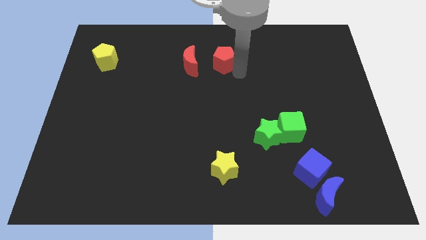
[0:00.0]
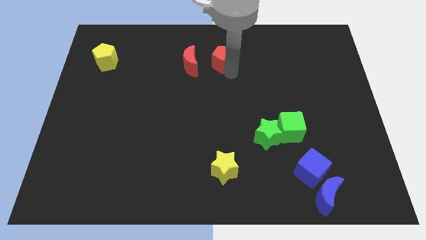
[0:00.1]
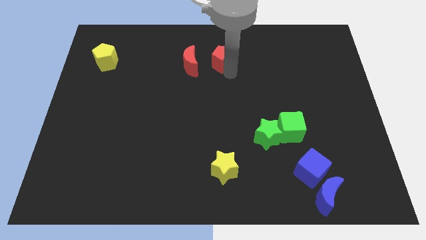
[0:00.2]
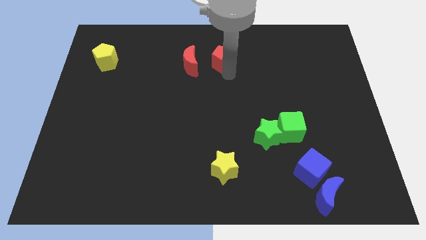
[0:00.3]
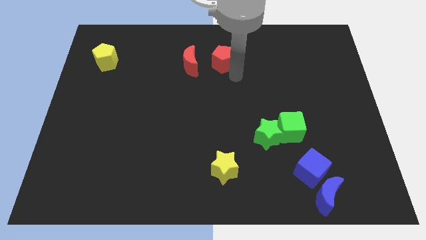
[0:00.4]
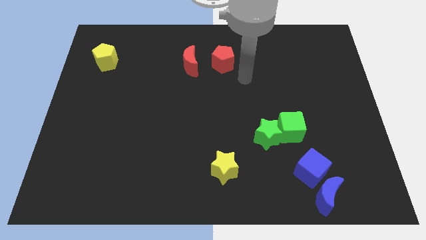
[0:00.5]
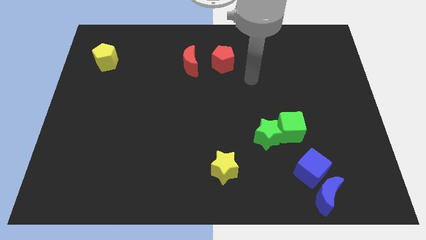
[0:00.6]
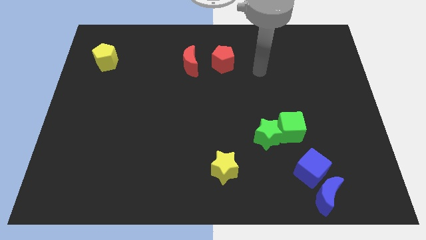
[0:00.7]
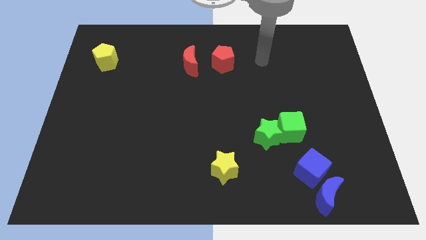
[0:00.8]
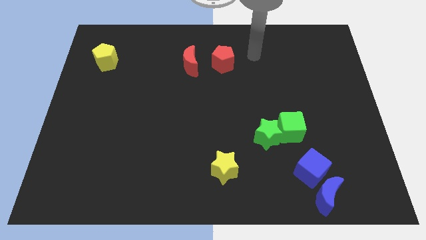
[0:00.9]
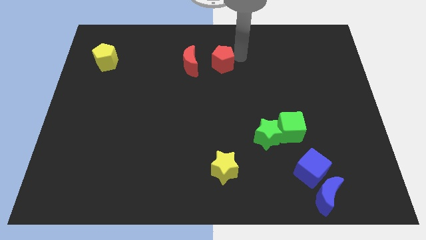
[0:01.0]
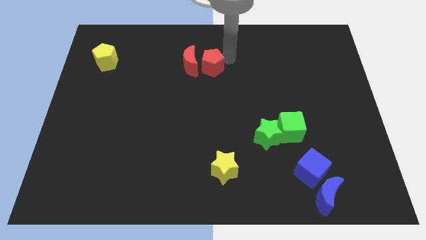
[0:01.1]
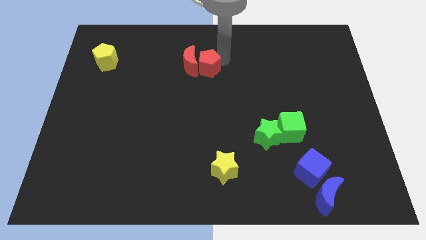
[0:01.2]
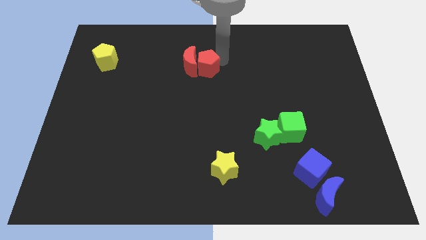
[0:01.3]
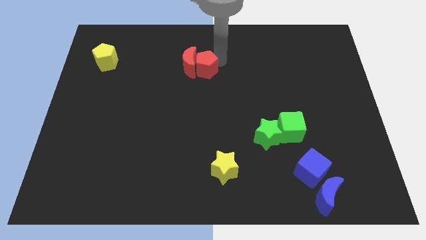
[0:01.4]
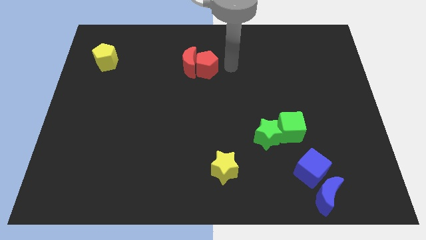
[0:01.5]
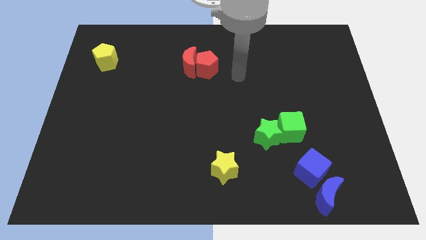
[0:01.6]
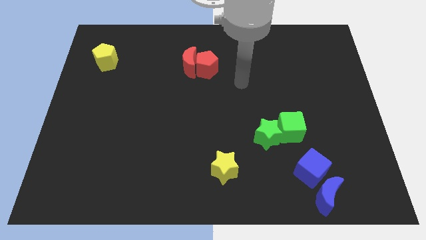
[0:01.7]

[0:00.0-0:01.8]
move the red pentagon into the red moon

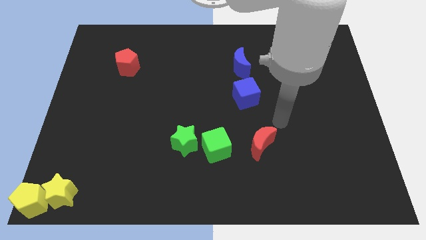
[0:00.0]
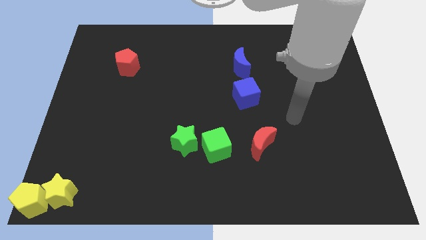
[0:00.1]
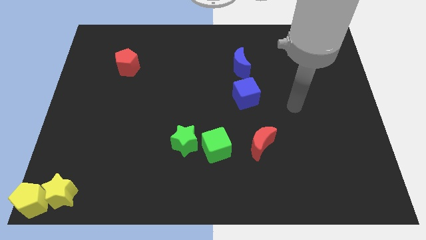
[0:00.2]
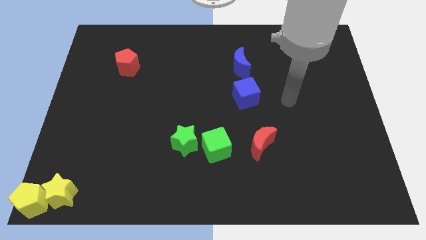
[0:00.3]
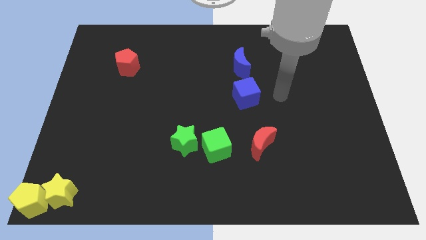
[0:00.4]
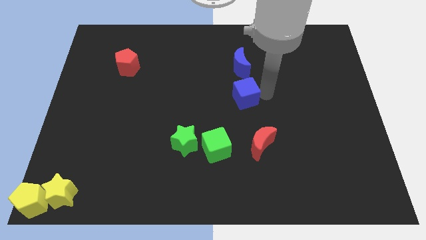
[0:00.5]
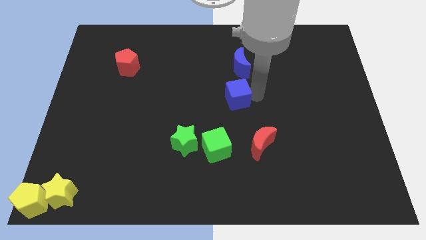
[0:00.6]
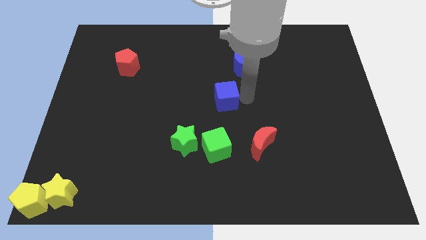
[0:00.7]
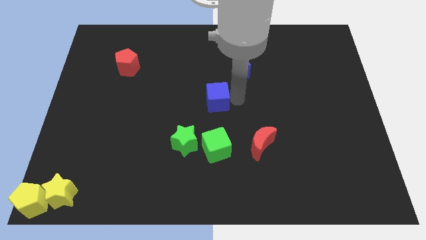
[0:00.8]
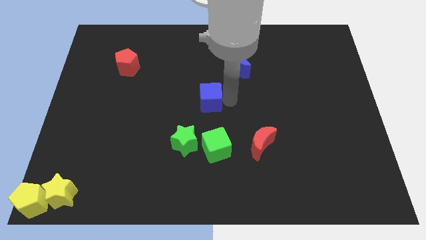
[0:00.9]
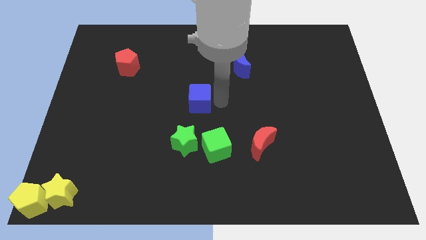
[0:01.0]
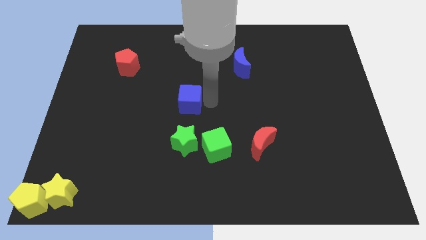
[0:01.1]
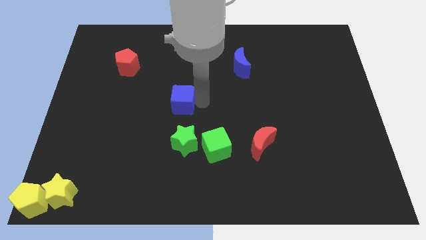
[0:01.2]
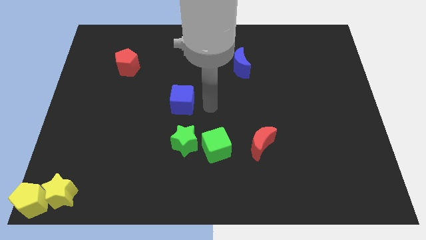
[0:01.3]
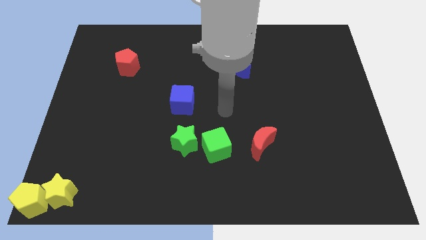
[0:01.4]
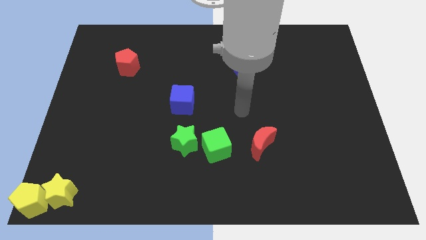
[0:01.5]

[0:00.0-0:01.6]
move the blue cube diagonal to the top of the green star

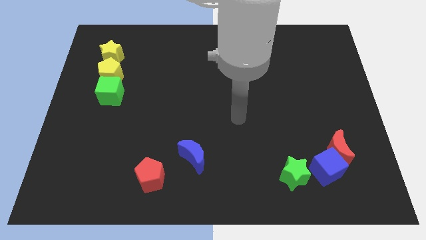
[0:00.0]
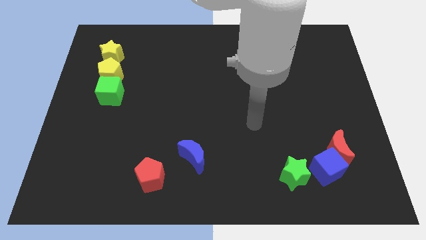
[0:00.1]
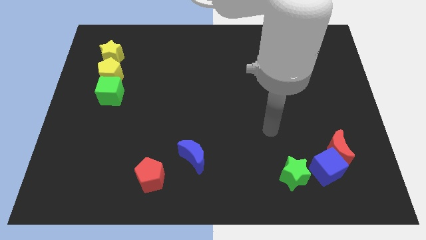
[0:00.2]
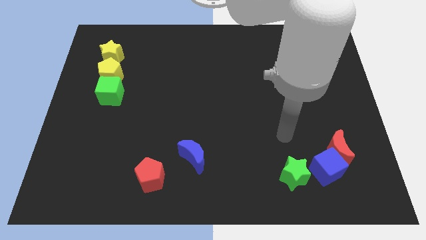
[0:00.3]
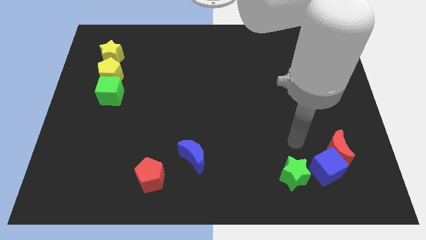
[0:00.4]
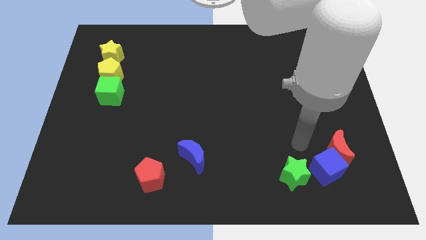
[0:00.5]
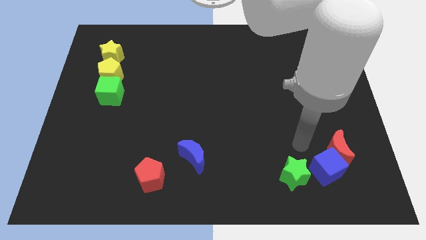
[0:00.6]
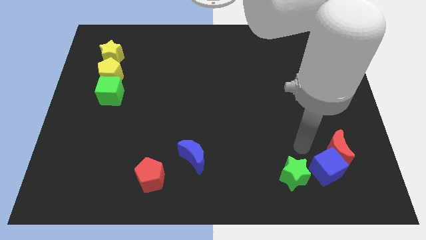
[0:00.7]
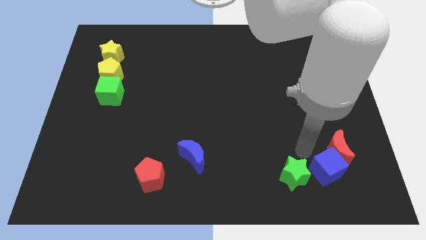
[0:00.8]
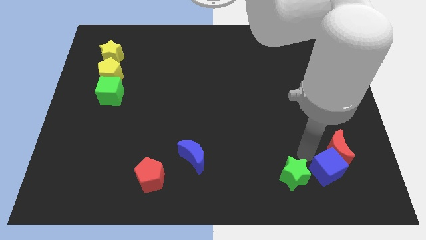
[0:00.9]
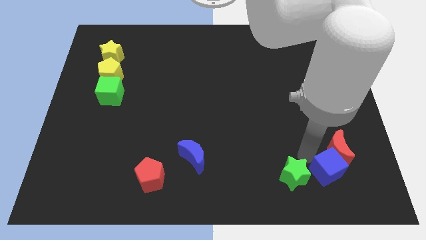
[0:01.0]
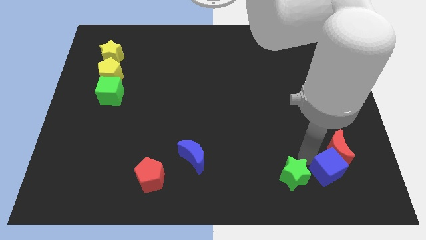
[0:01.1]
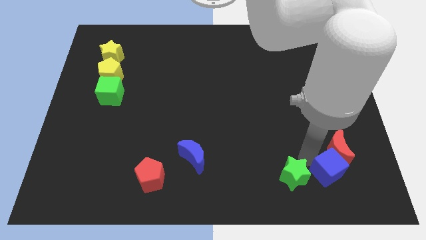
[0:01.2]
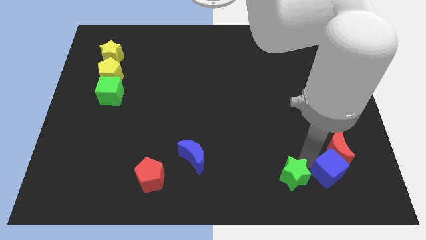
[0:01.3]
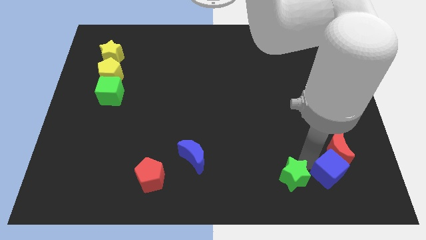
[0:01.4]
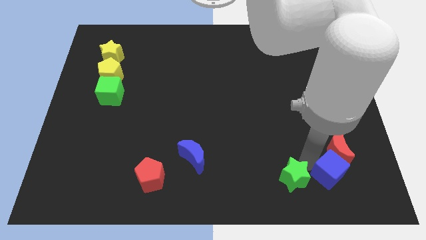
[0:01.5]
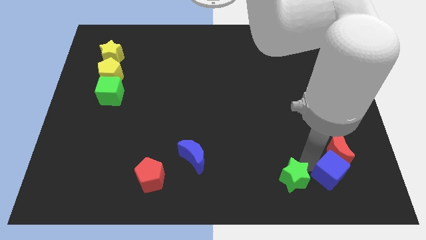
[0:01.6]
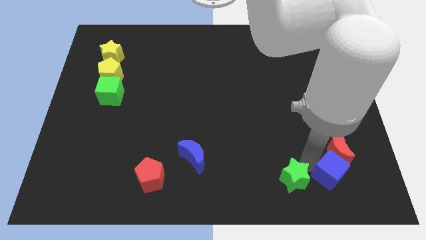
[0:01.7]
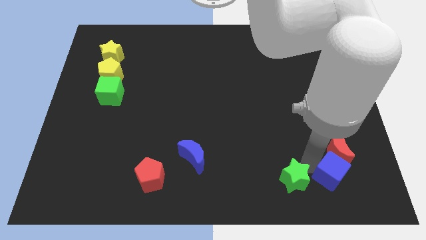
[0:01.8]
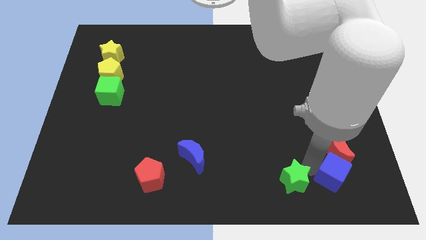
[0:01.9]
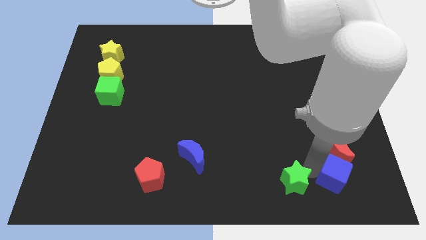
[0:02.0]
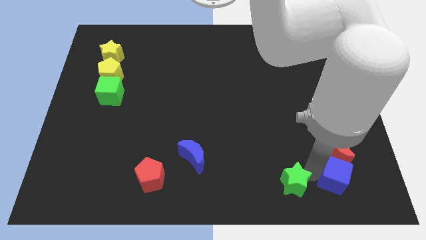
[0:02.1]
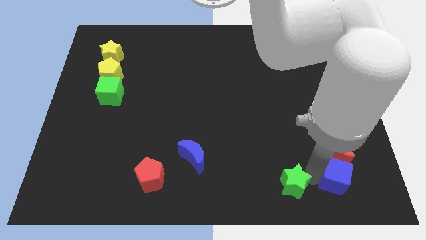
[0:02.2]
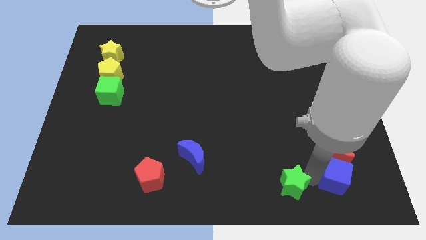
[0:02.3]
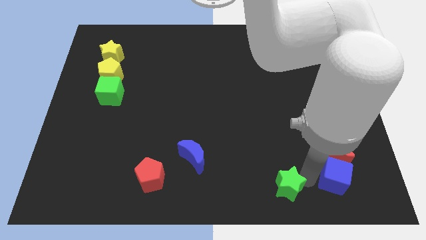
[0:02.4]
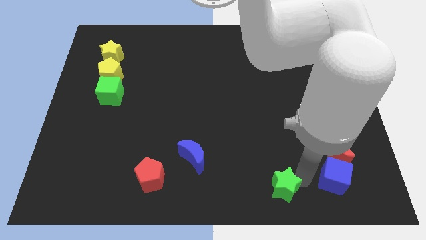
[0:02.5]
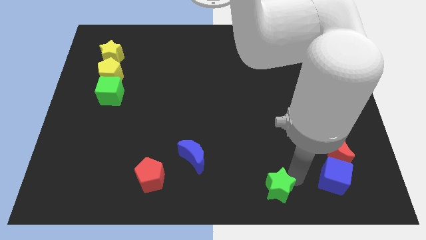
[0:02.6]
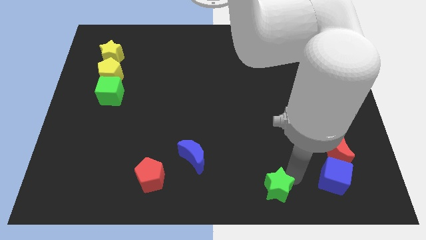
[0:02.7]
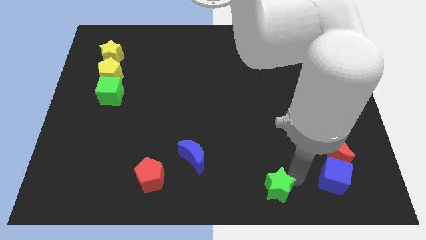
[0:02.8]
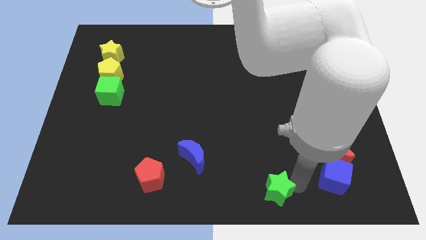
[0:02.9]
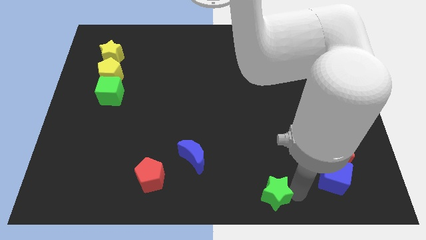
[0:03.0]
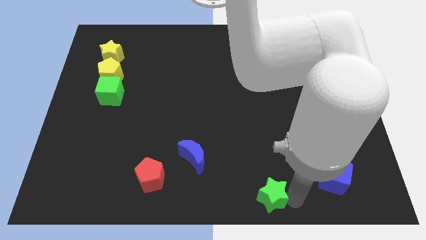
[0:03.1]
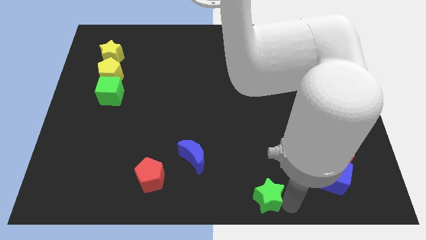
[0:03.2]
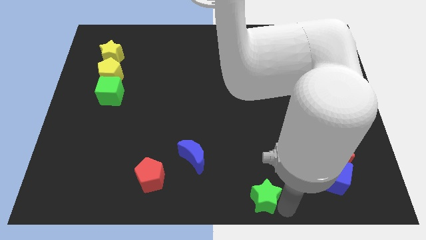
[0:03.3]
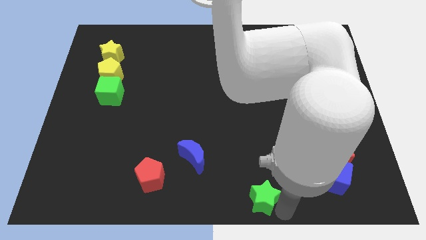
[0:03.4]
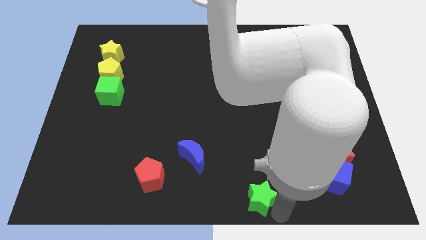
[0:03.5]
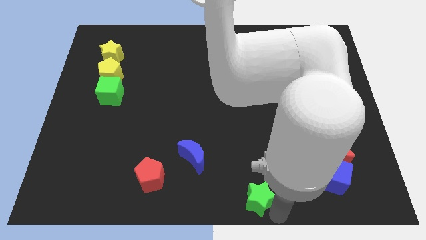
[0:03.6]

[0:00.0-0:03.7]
place the green star to the bottom center of the board

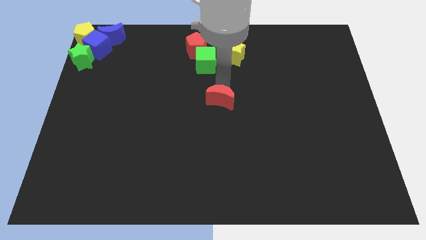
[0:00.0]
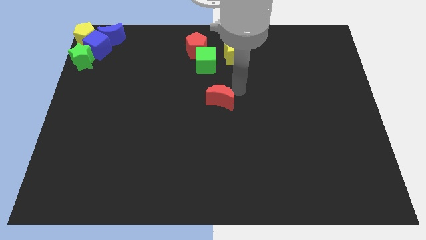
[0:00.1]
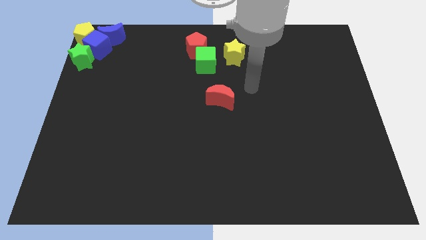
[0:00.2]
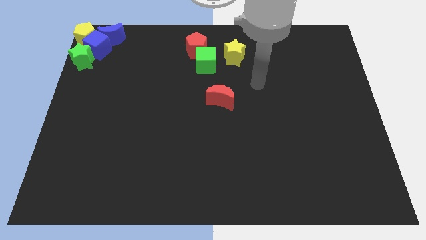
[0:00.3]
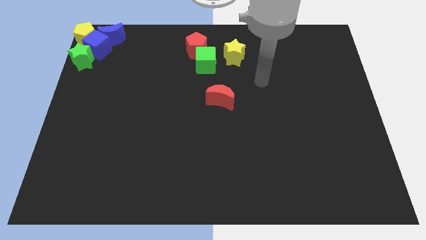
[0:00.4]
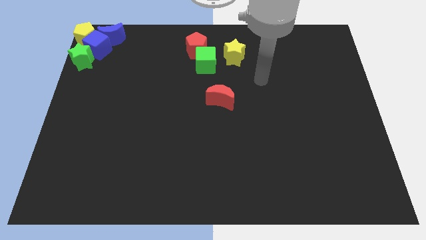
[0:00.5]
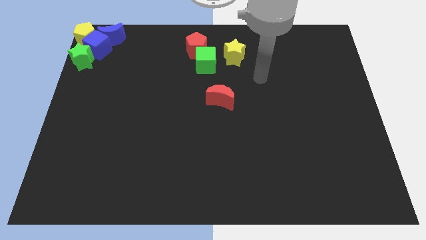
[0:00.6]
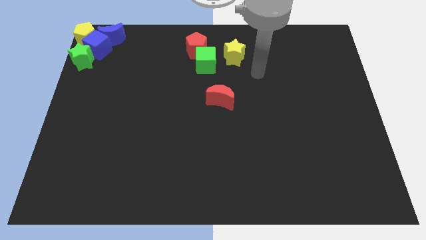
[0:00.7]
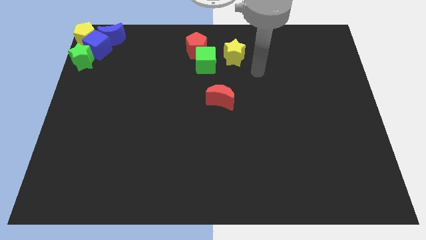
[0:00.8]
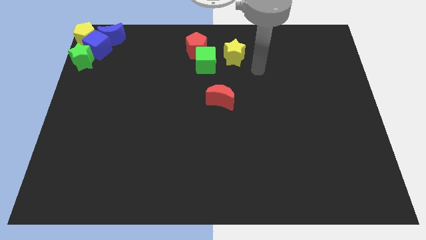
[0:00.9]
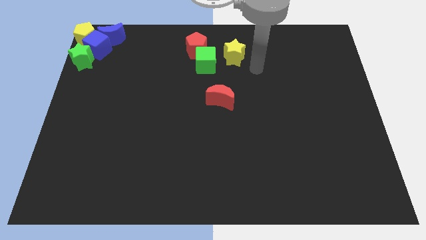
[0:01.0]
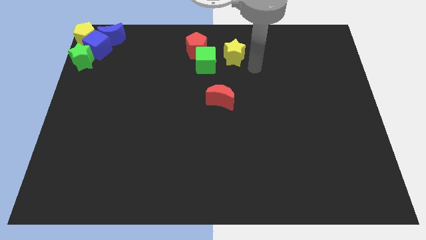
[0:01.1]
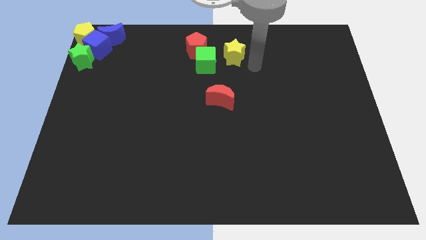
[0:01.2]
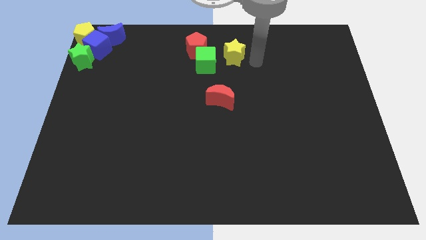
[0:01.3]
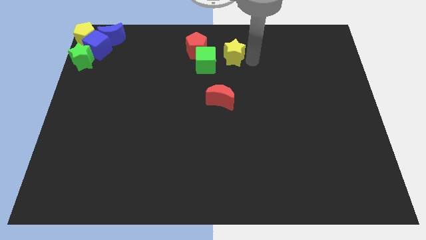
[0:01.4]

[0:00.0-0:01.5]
place your arm to the right of yellow star

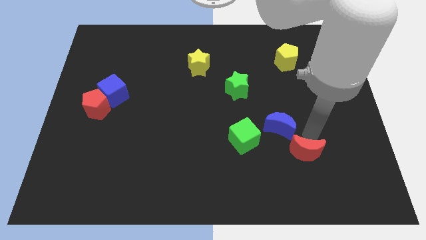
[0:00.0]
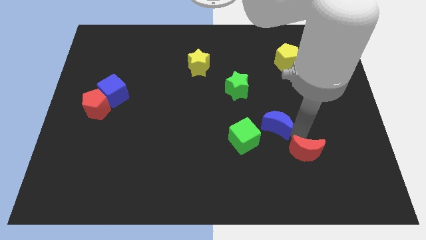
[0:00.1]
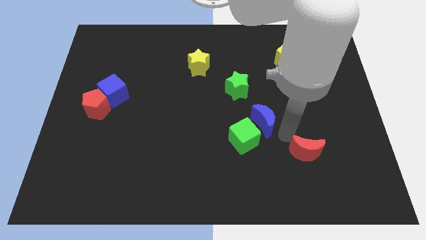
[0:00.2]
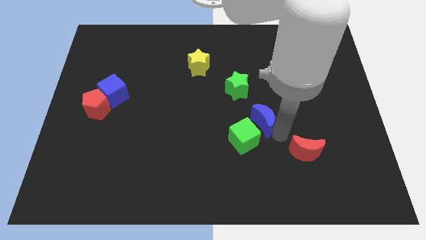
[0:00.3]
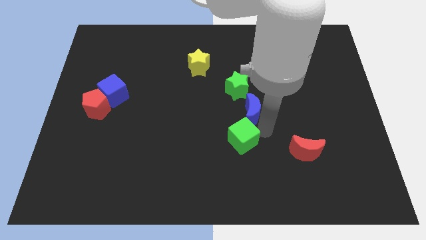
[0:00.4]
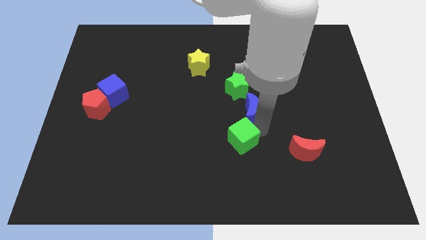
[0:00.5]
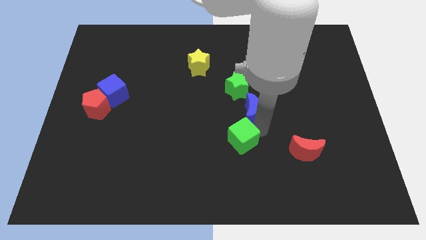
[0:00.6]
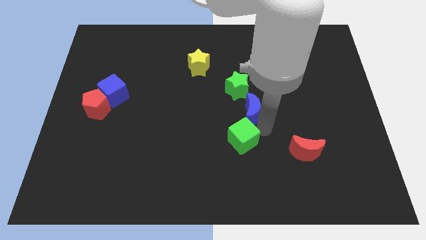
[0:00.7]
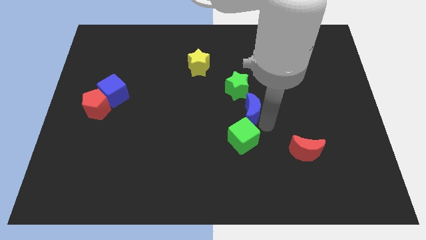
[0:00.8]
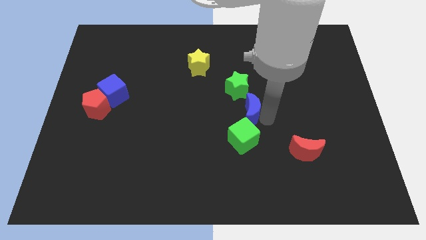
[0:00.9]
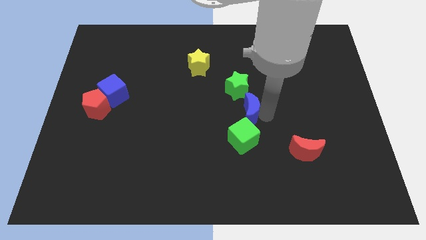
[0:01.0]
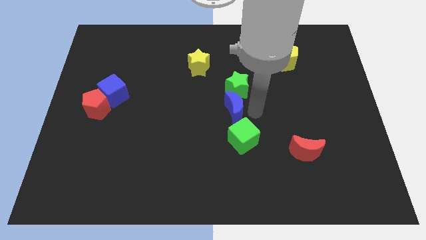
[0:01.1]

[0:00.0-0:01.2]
move the blue crescent in between green cube and green star
